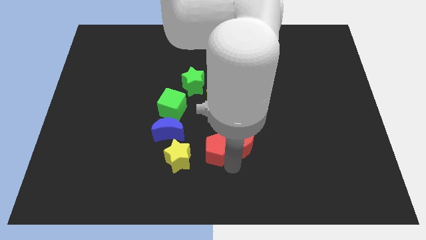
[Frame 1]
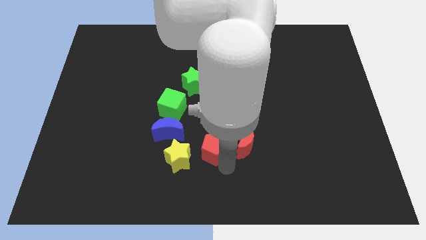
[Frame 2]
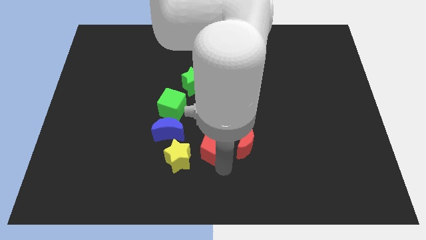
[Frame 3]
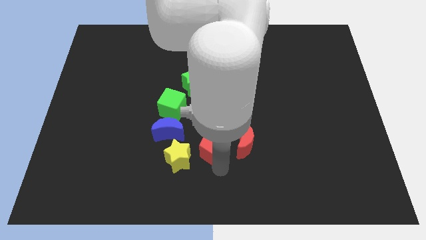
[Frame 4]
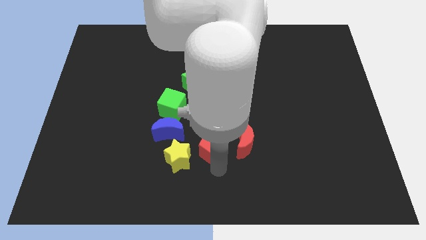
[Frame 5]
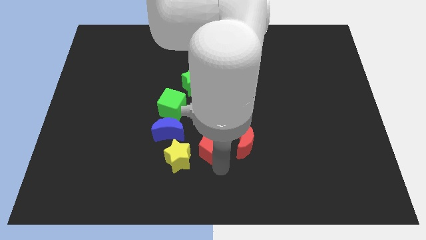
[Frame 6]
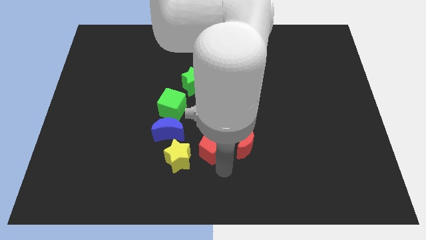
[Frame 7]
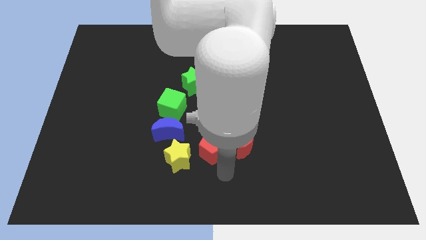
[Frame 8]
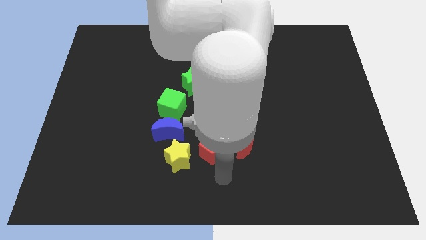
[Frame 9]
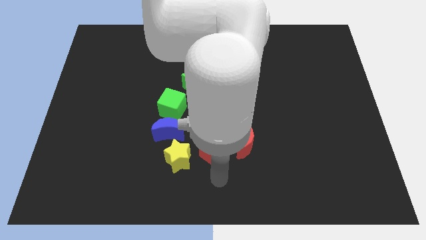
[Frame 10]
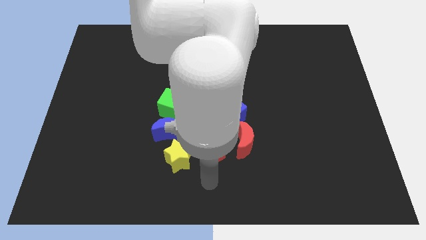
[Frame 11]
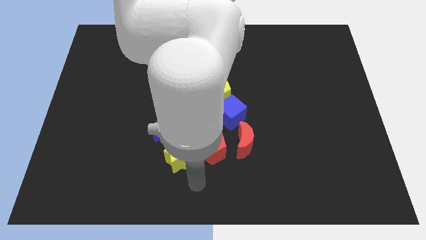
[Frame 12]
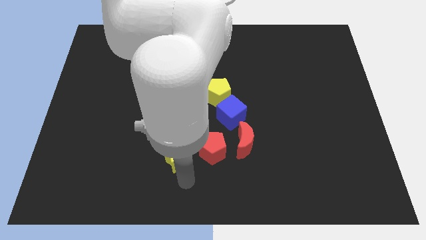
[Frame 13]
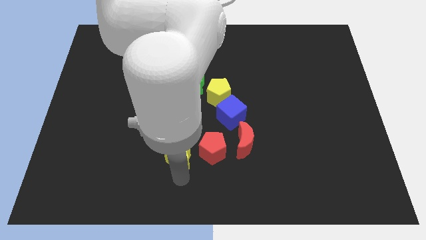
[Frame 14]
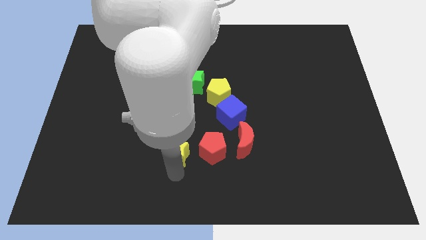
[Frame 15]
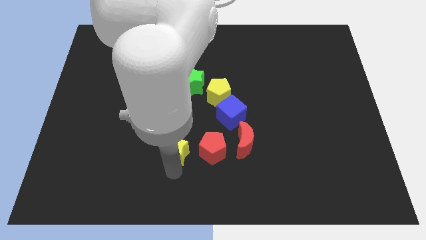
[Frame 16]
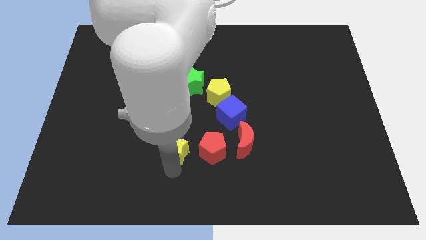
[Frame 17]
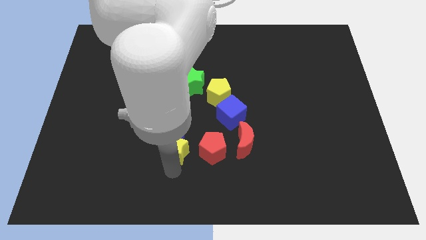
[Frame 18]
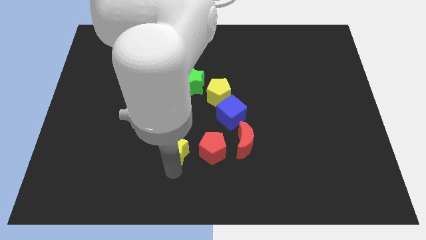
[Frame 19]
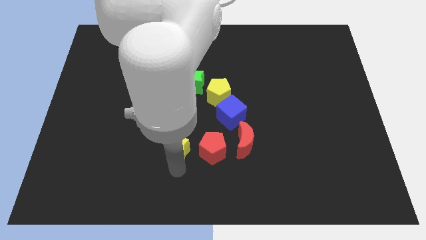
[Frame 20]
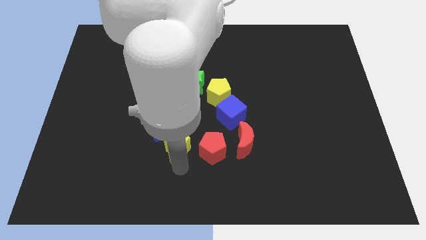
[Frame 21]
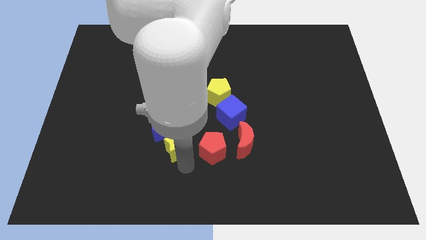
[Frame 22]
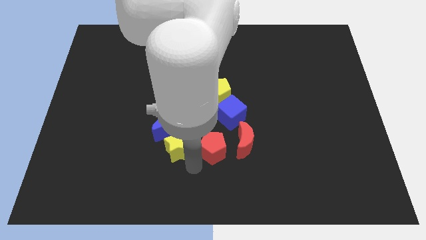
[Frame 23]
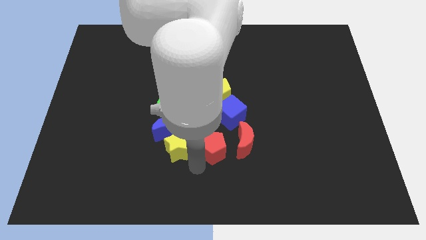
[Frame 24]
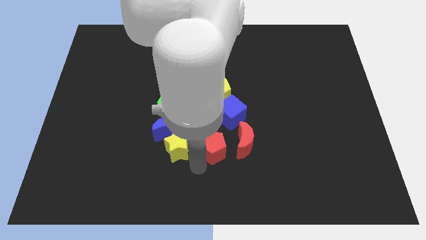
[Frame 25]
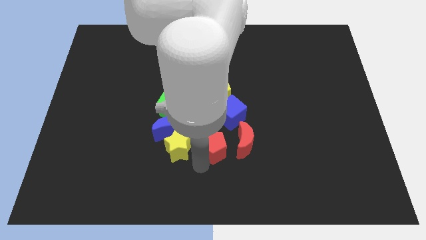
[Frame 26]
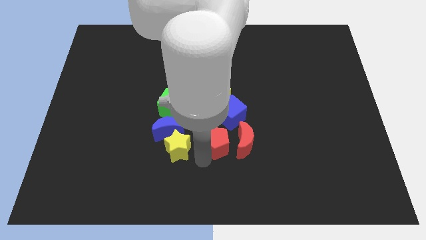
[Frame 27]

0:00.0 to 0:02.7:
move the yellow star slightly to the top

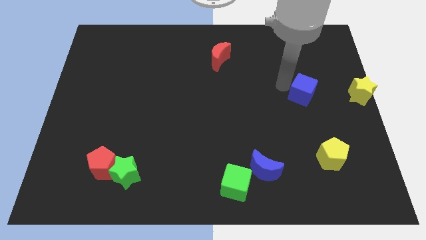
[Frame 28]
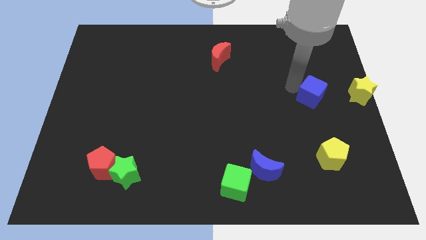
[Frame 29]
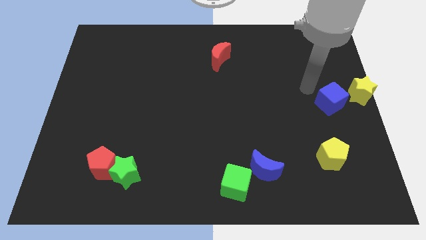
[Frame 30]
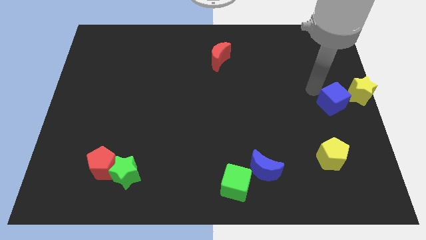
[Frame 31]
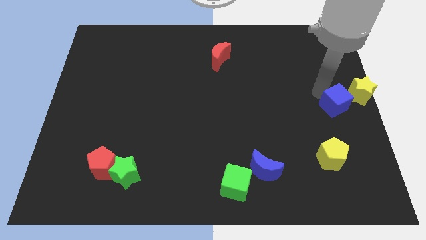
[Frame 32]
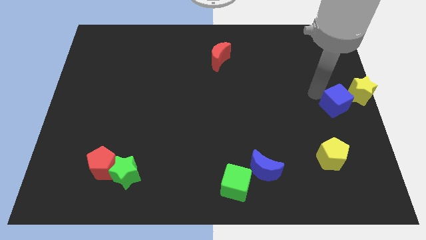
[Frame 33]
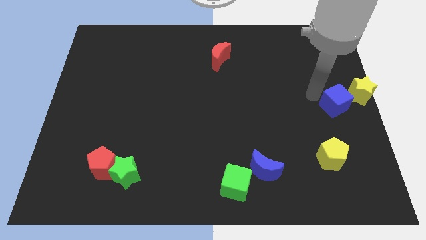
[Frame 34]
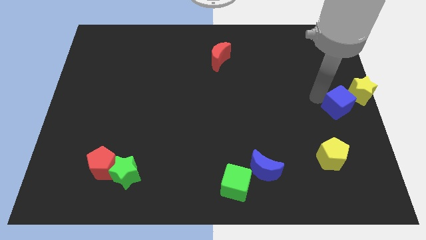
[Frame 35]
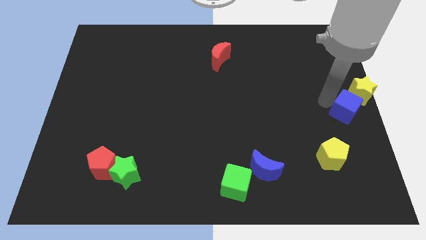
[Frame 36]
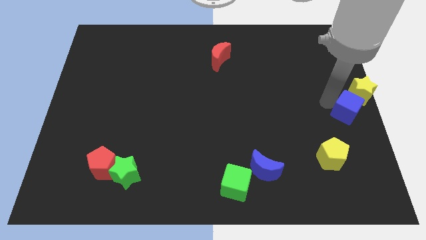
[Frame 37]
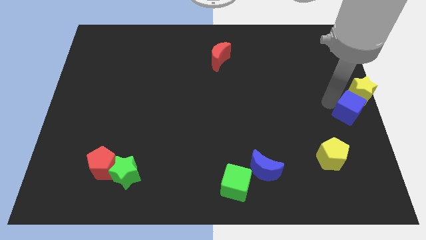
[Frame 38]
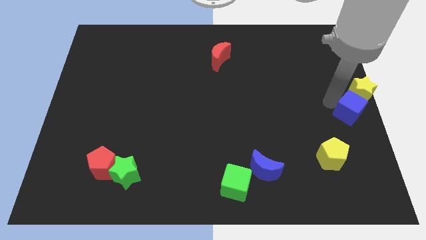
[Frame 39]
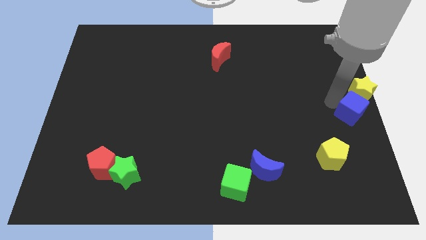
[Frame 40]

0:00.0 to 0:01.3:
move the blue cube to the yellow star

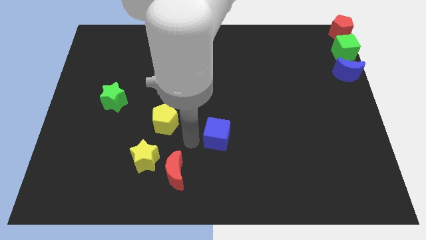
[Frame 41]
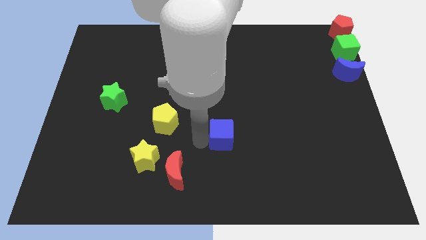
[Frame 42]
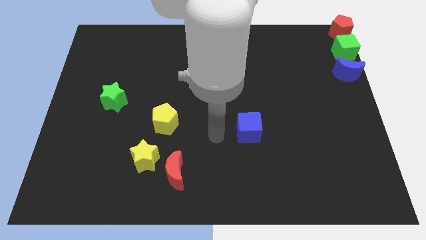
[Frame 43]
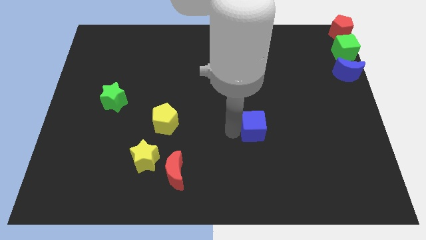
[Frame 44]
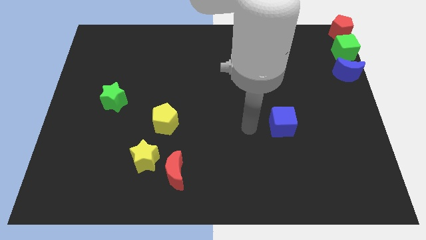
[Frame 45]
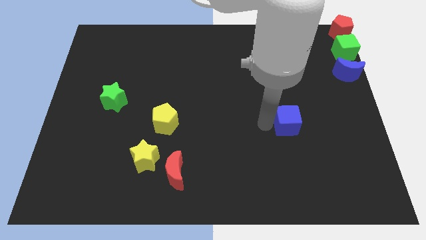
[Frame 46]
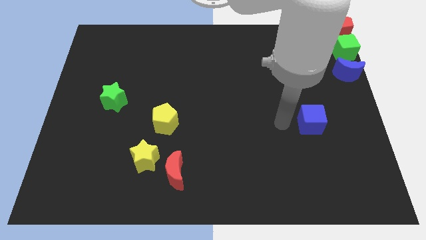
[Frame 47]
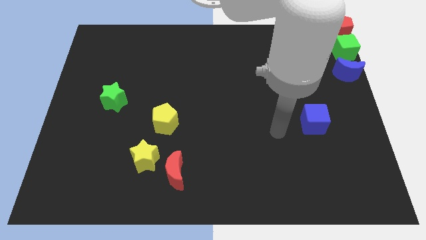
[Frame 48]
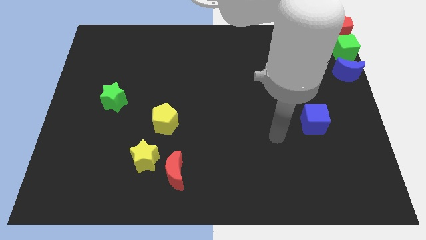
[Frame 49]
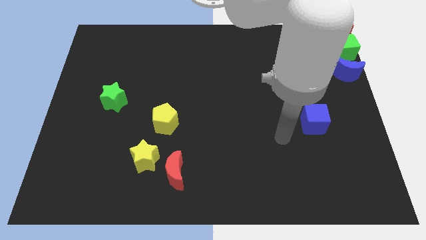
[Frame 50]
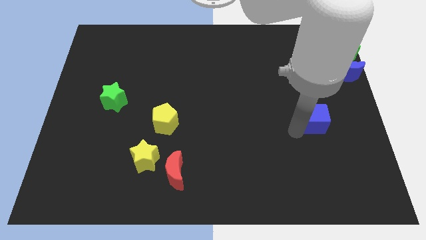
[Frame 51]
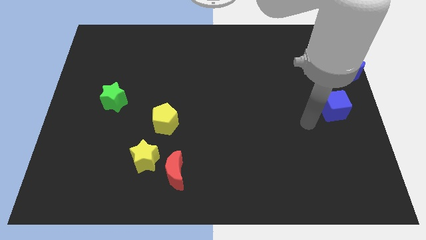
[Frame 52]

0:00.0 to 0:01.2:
push the blue cube diagonally on the bottom left side of the blue moon

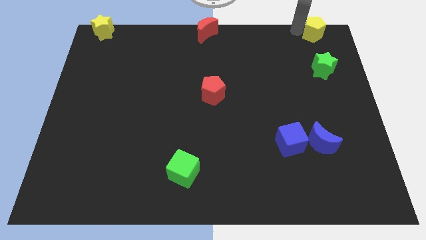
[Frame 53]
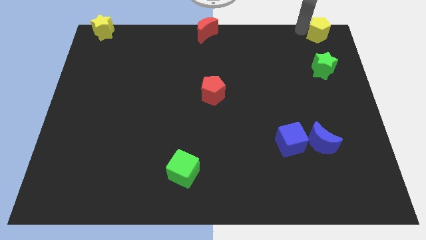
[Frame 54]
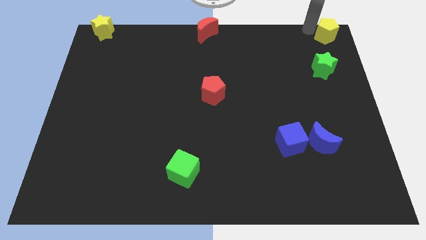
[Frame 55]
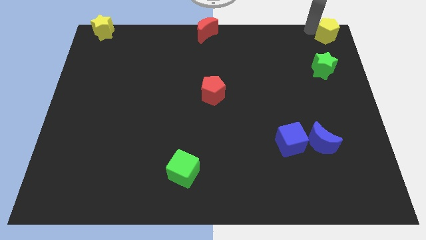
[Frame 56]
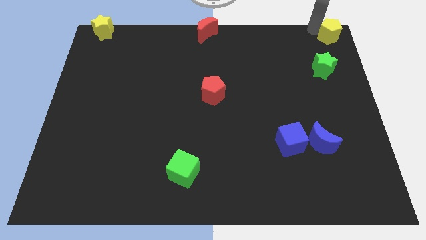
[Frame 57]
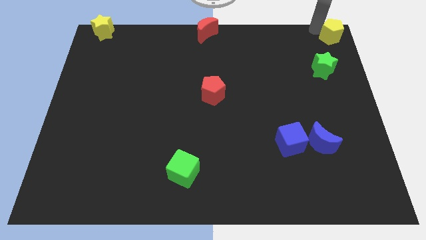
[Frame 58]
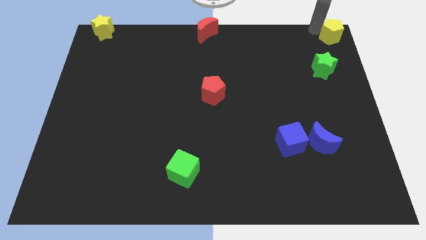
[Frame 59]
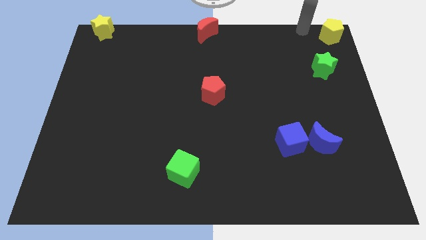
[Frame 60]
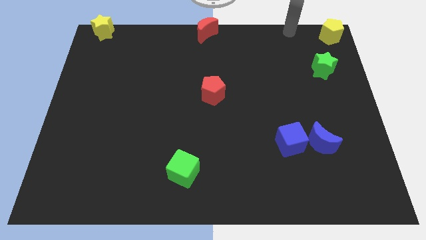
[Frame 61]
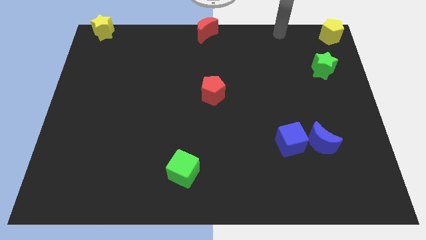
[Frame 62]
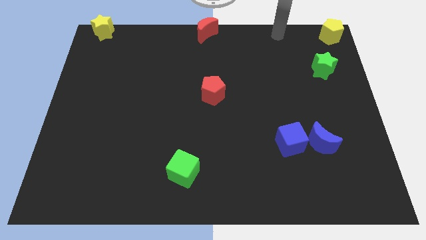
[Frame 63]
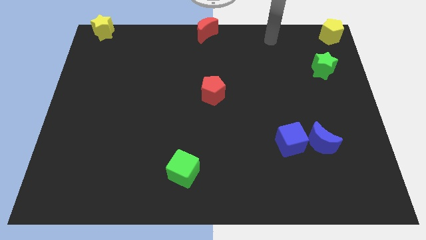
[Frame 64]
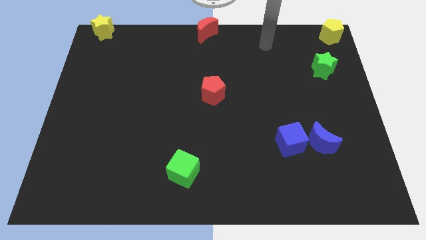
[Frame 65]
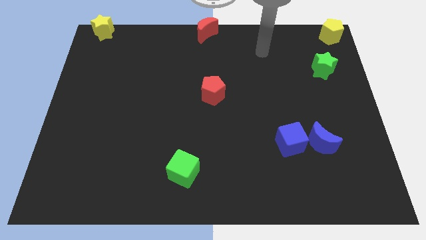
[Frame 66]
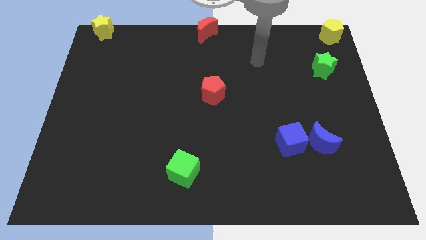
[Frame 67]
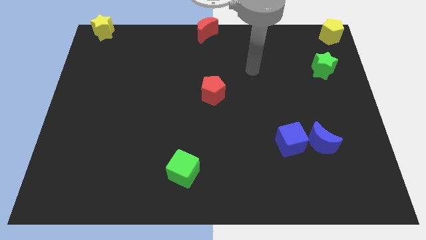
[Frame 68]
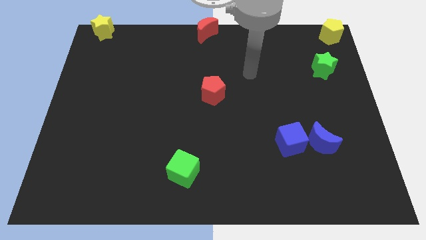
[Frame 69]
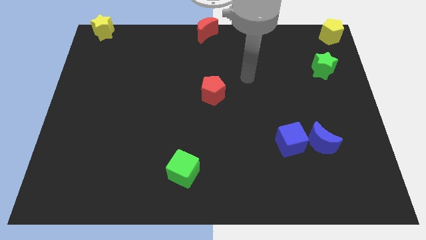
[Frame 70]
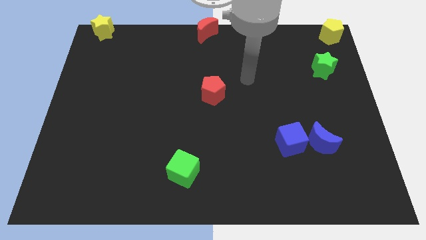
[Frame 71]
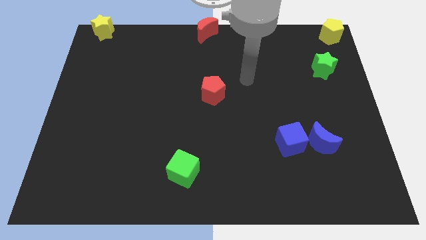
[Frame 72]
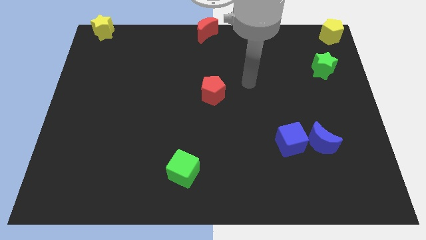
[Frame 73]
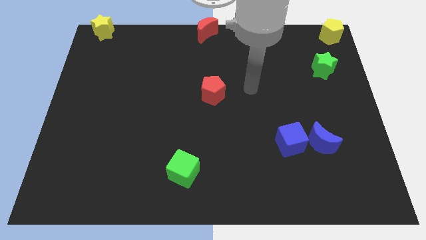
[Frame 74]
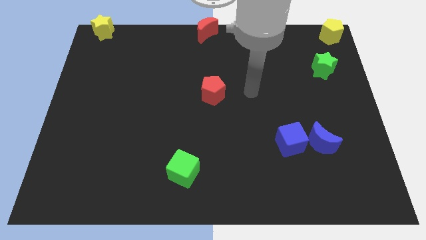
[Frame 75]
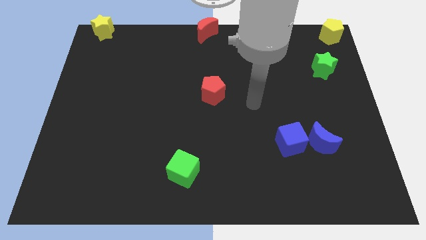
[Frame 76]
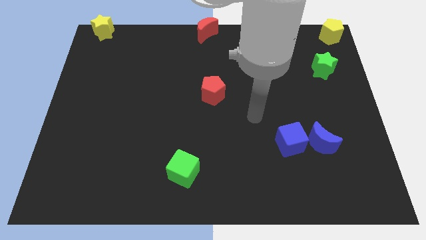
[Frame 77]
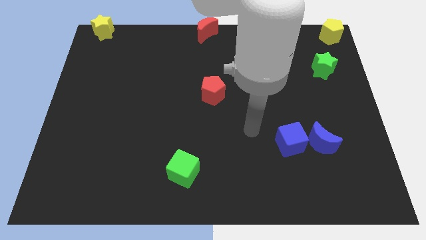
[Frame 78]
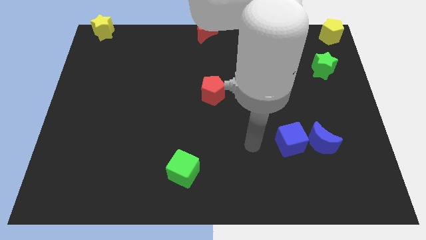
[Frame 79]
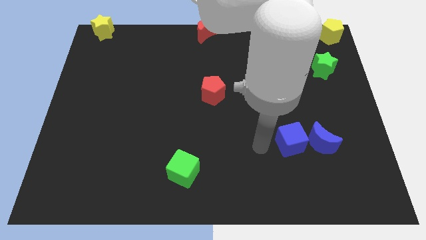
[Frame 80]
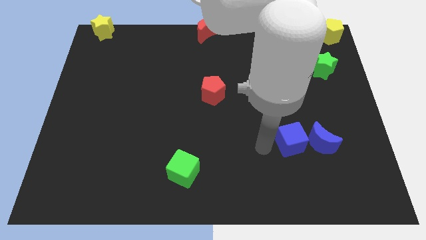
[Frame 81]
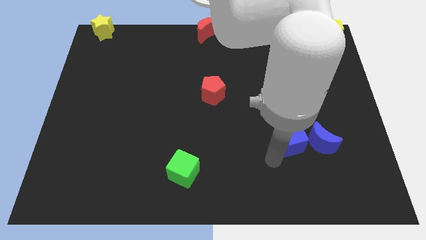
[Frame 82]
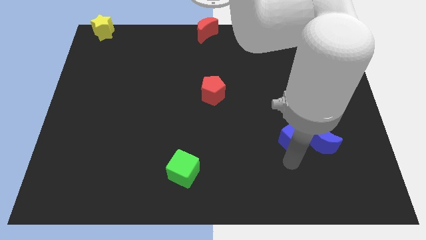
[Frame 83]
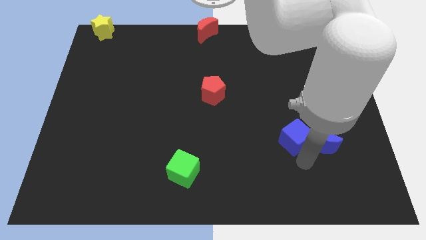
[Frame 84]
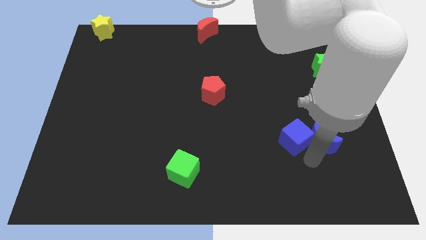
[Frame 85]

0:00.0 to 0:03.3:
push the yellow pentagon to the top right corner of the board

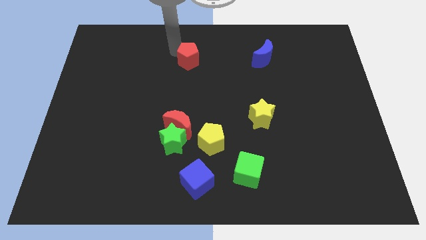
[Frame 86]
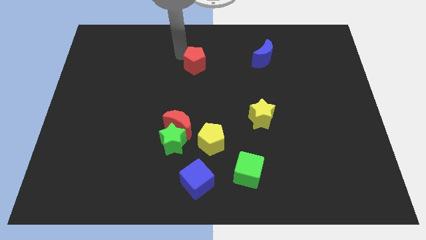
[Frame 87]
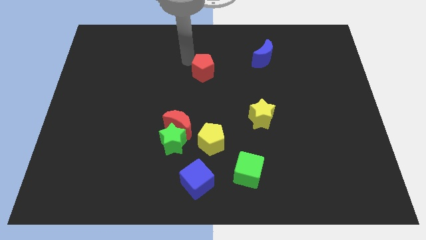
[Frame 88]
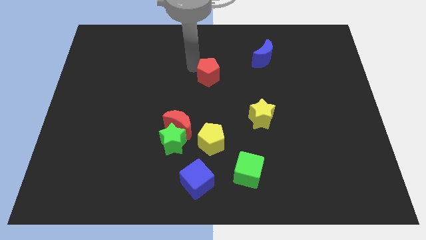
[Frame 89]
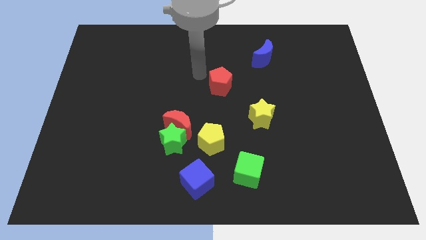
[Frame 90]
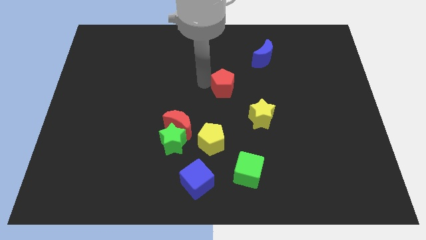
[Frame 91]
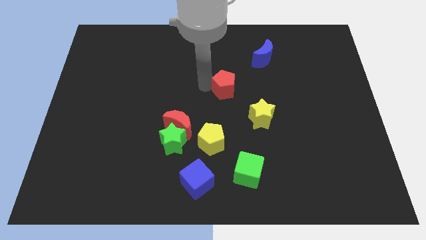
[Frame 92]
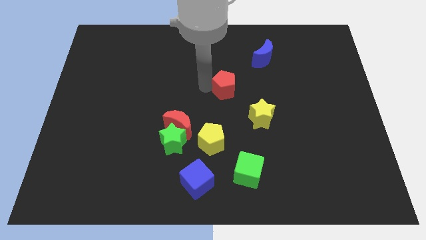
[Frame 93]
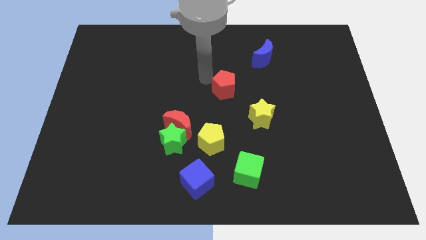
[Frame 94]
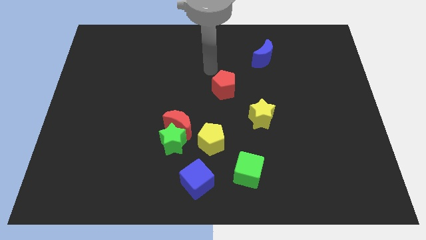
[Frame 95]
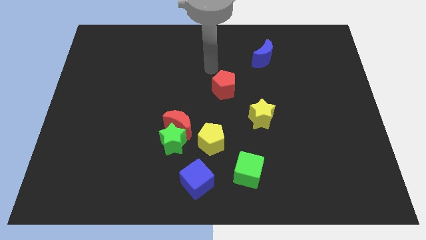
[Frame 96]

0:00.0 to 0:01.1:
place the red pentagon above the yellow pentagon
